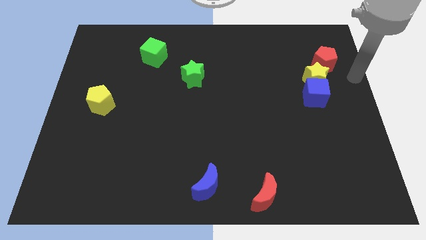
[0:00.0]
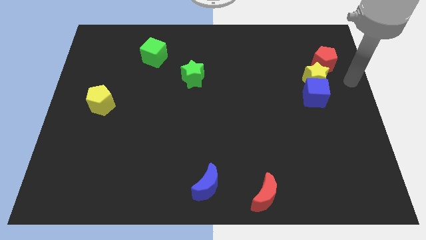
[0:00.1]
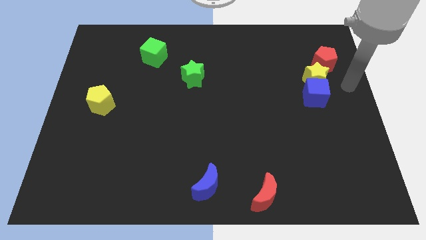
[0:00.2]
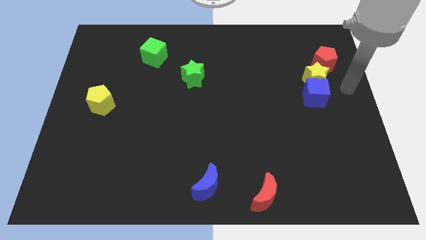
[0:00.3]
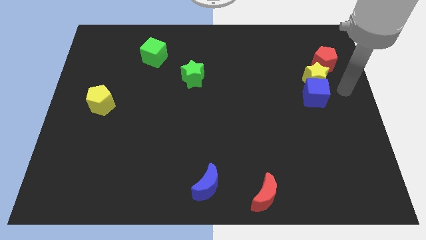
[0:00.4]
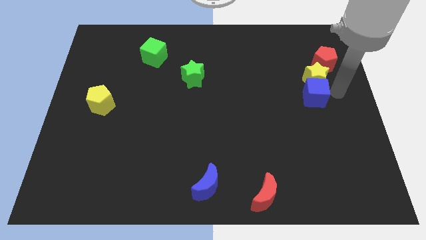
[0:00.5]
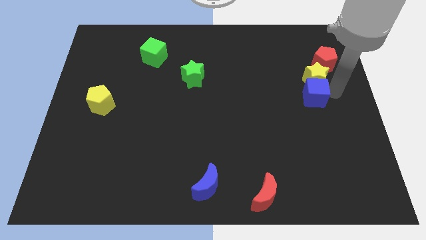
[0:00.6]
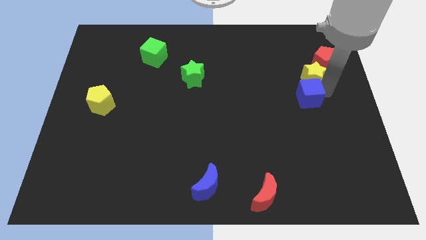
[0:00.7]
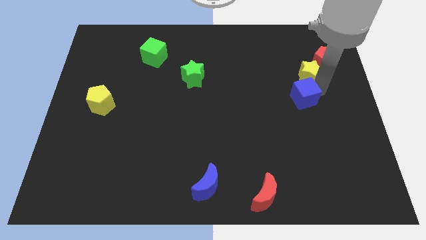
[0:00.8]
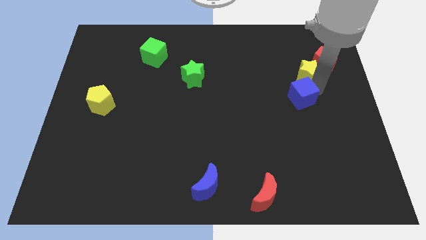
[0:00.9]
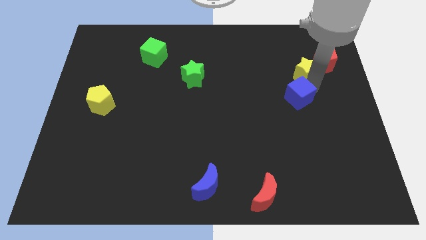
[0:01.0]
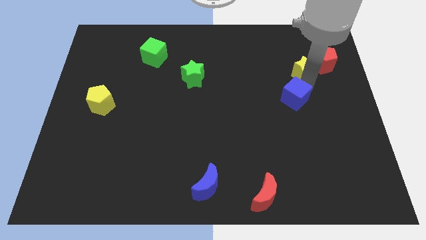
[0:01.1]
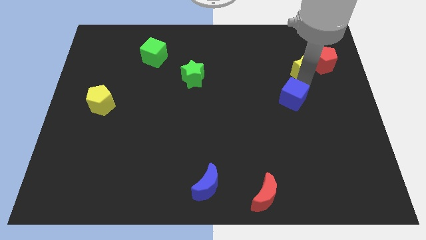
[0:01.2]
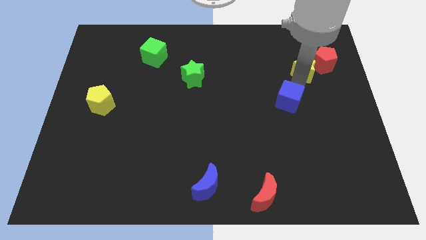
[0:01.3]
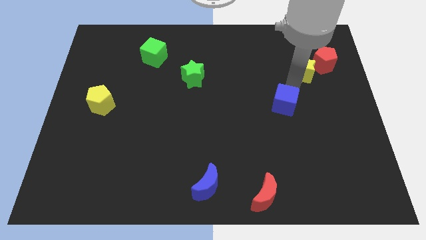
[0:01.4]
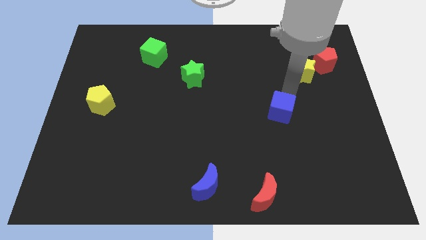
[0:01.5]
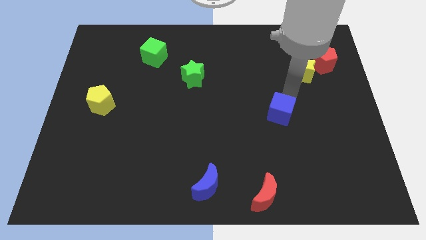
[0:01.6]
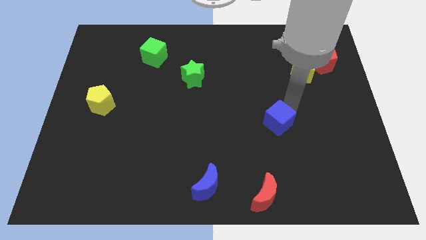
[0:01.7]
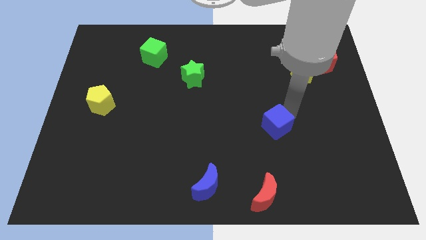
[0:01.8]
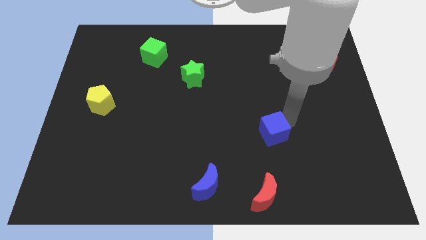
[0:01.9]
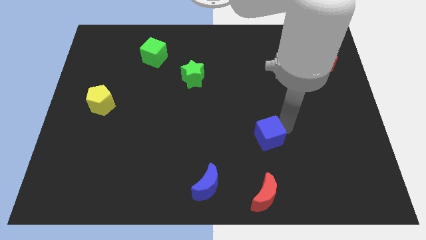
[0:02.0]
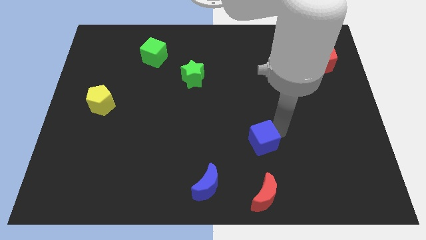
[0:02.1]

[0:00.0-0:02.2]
move the blue cube to the bottom of the board

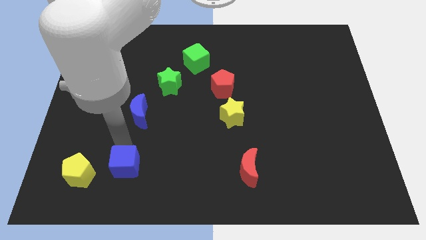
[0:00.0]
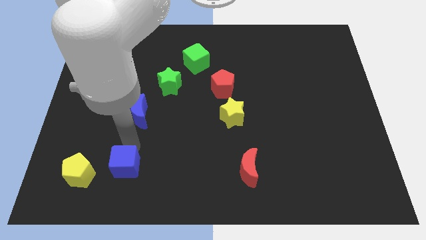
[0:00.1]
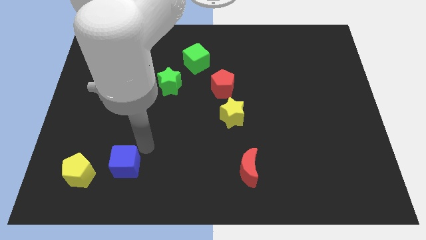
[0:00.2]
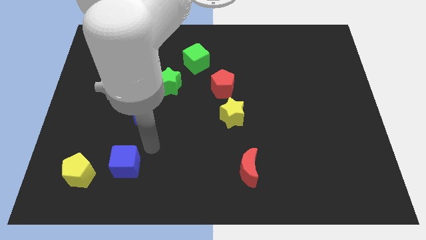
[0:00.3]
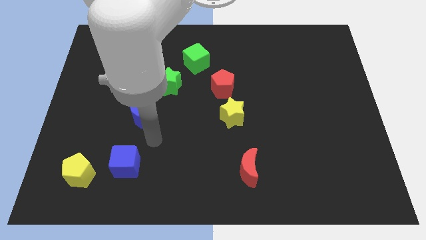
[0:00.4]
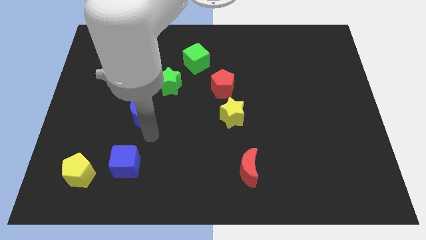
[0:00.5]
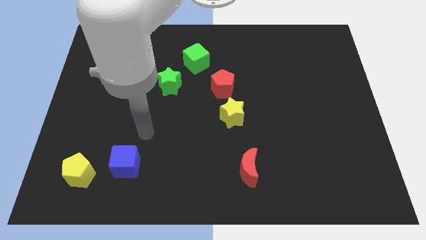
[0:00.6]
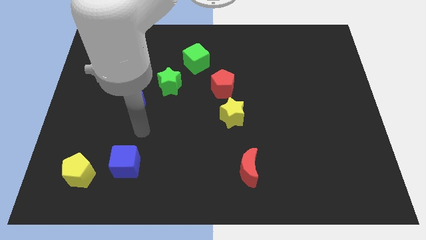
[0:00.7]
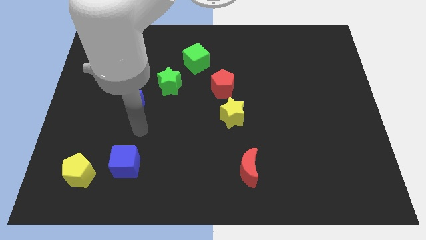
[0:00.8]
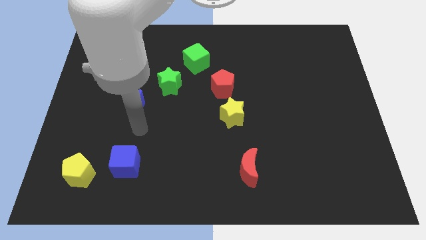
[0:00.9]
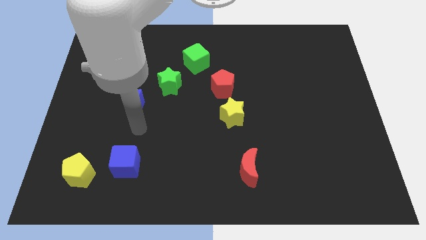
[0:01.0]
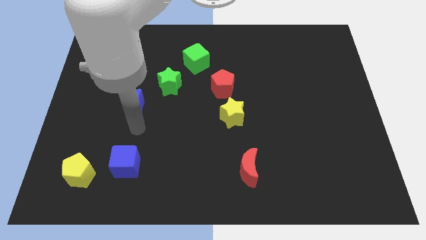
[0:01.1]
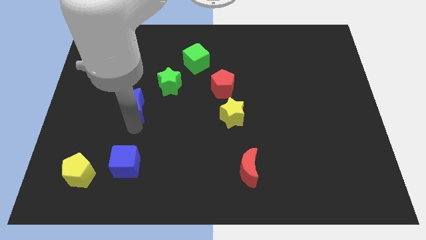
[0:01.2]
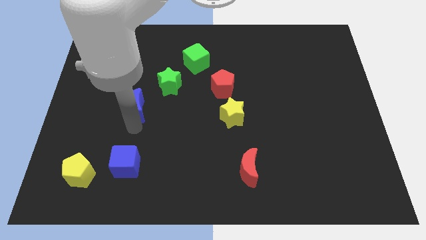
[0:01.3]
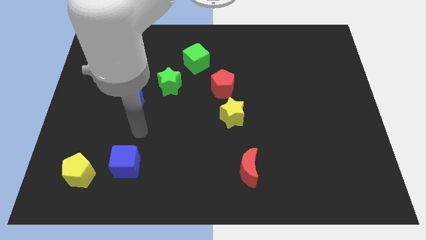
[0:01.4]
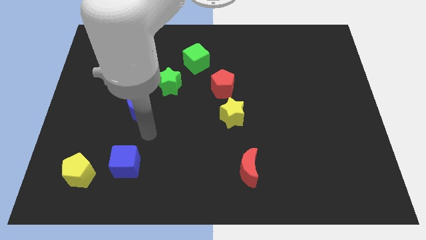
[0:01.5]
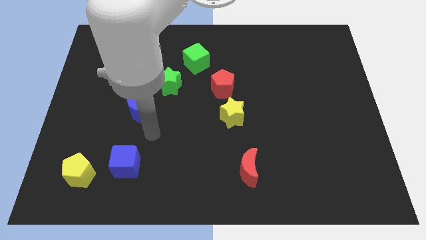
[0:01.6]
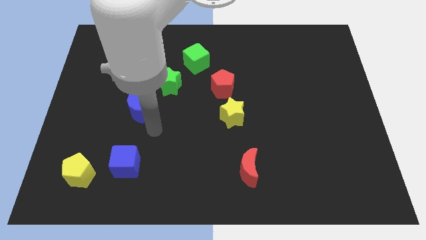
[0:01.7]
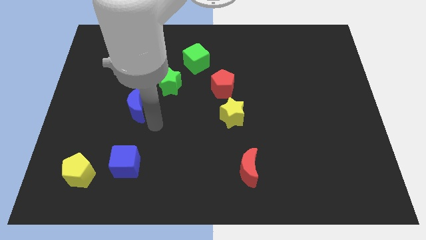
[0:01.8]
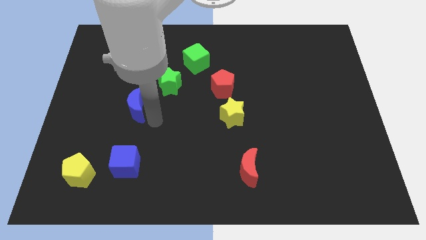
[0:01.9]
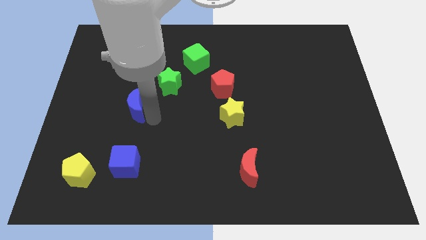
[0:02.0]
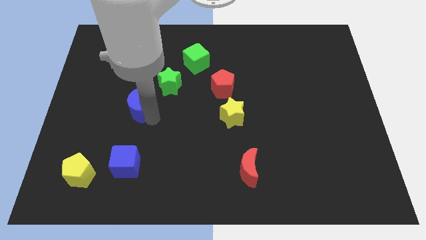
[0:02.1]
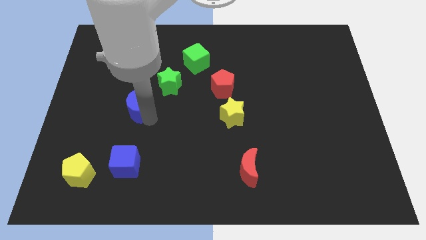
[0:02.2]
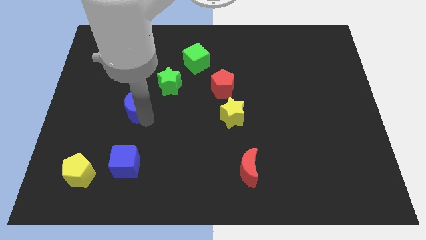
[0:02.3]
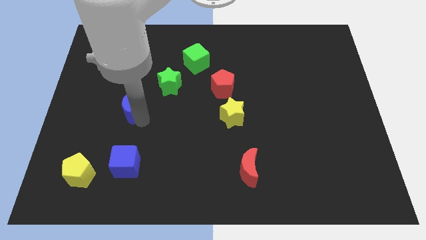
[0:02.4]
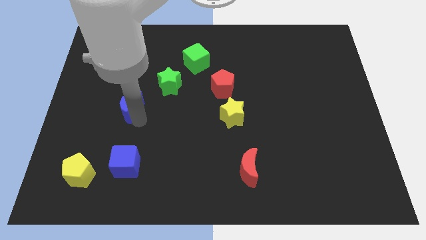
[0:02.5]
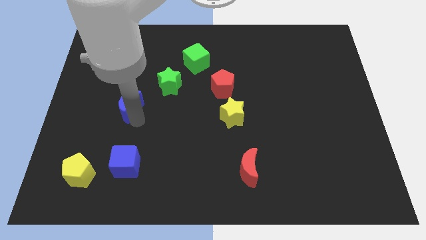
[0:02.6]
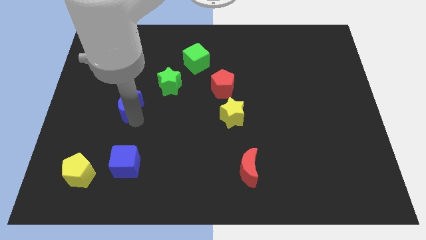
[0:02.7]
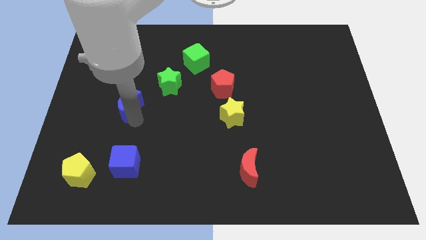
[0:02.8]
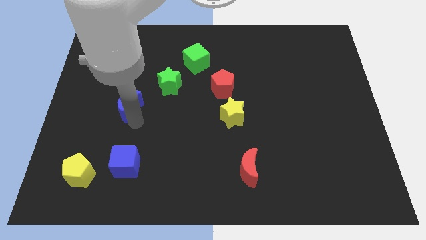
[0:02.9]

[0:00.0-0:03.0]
place blue crescent diagonally towards green star

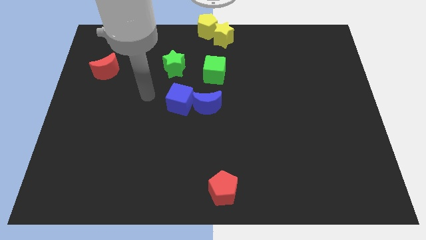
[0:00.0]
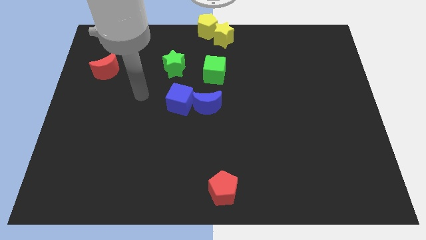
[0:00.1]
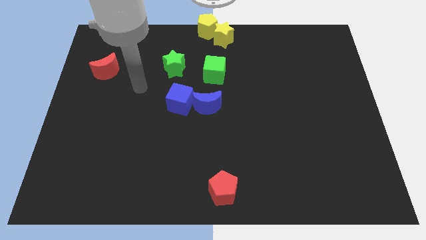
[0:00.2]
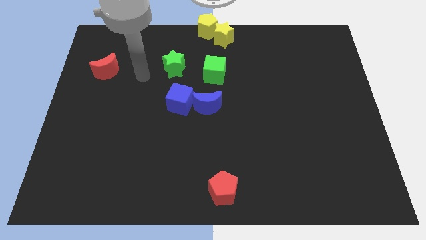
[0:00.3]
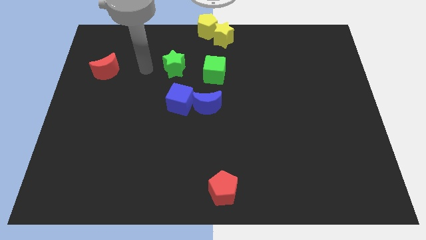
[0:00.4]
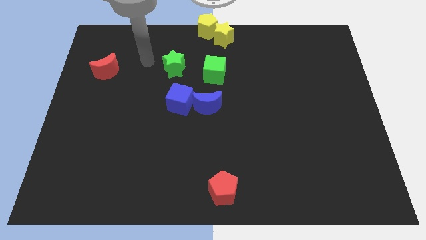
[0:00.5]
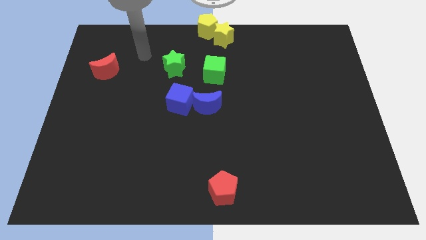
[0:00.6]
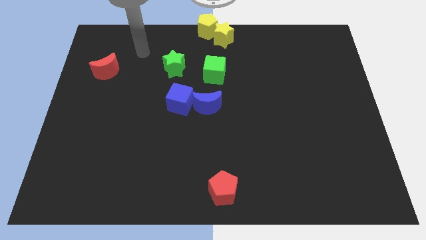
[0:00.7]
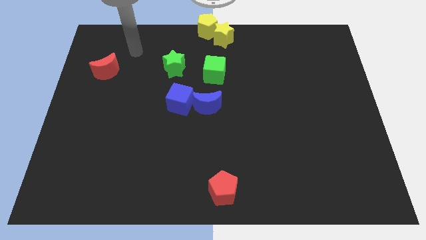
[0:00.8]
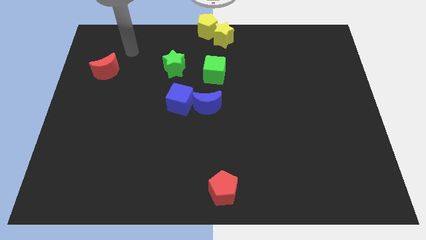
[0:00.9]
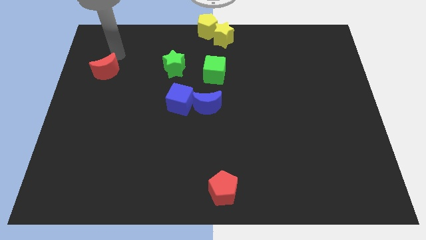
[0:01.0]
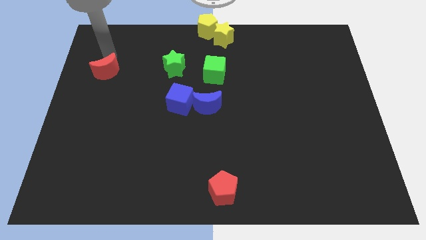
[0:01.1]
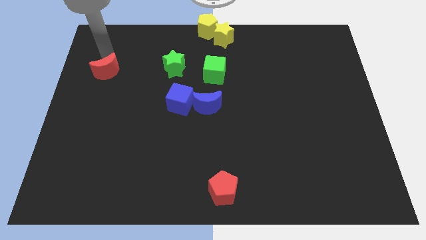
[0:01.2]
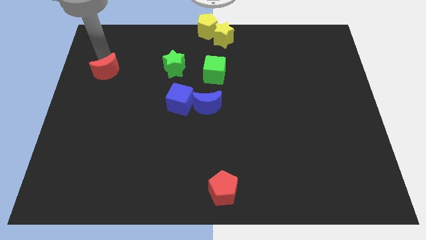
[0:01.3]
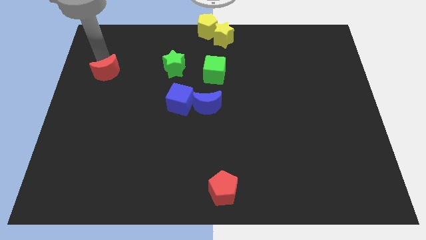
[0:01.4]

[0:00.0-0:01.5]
touch the top of the red moon

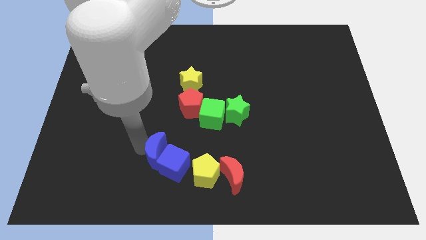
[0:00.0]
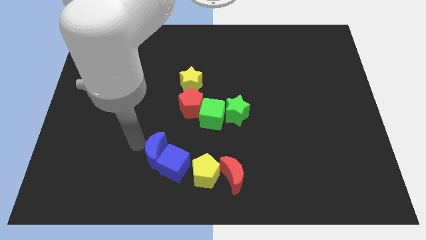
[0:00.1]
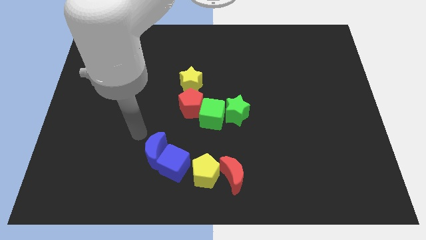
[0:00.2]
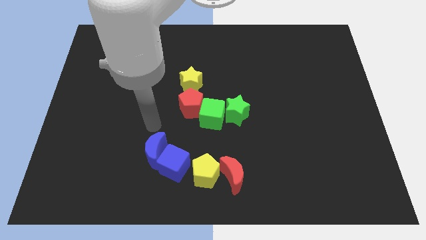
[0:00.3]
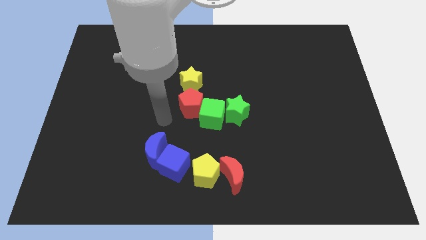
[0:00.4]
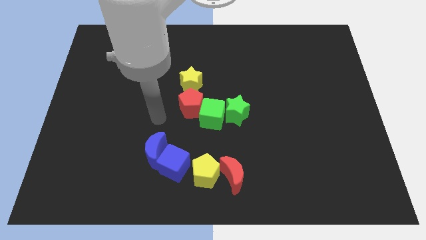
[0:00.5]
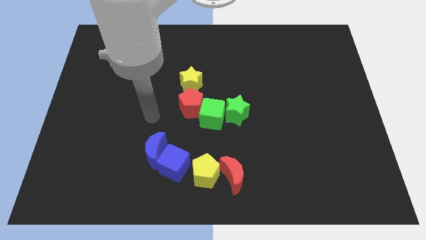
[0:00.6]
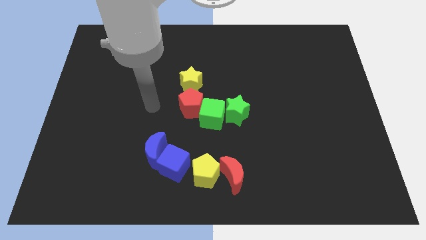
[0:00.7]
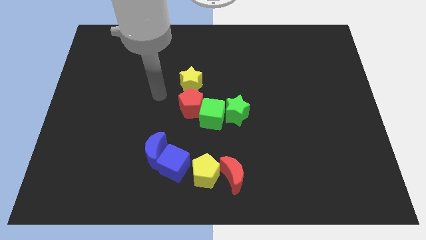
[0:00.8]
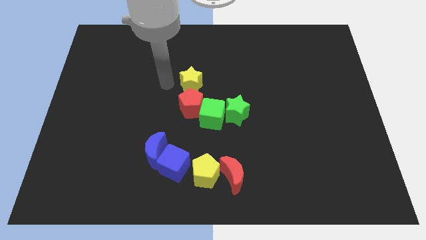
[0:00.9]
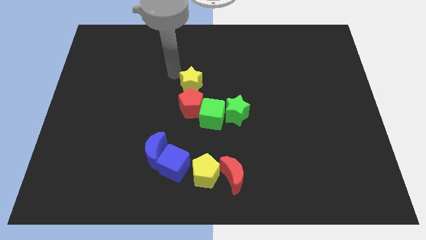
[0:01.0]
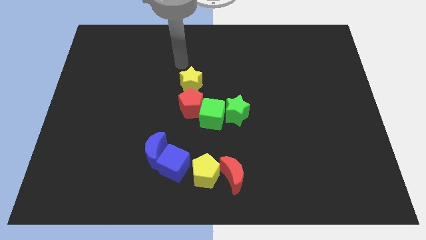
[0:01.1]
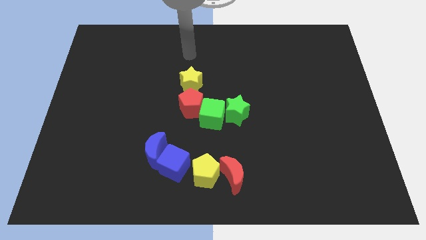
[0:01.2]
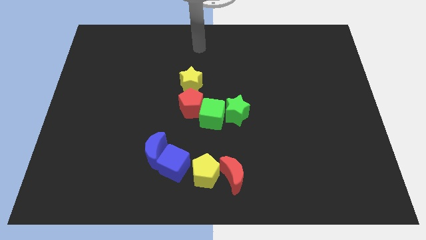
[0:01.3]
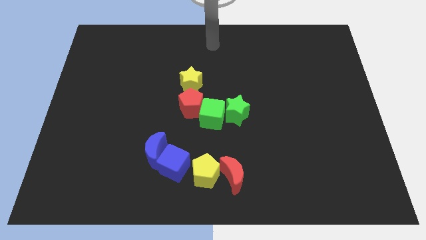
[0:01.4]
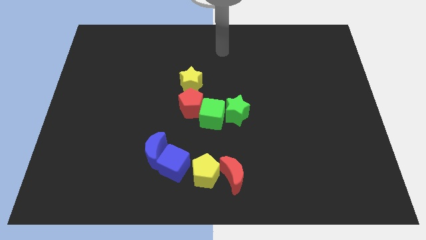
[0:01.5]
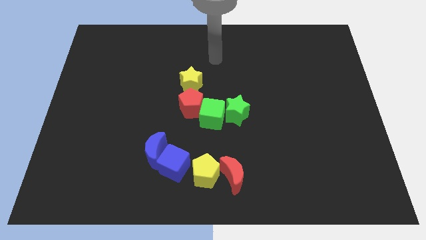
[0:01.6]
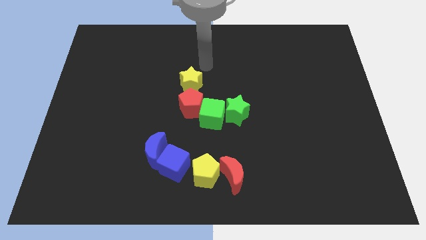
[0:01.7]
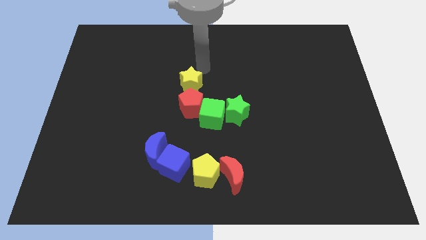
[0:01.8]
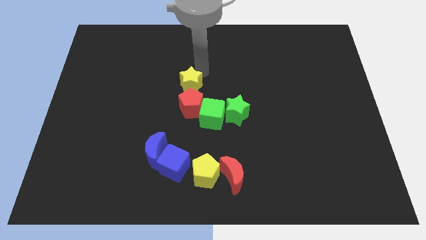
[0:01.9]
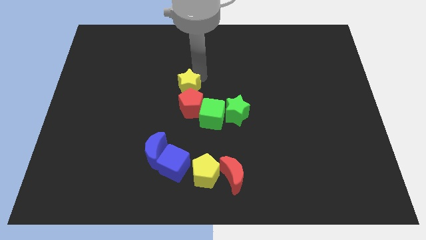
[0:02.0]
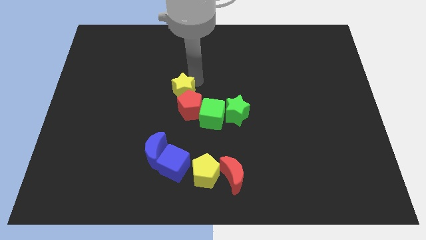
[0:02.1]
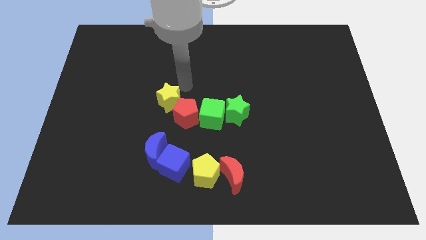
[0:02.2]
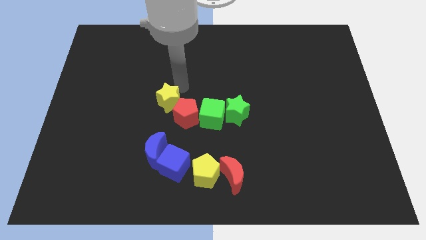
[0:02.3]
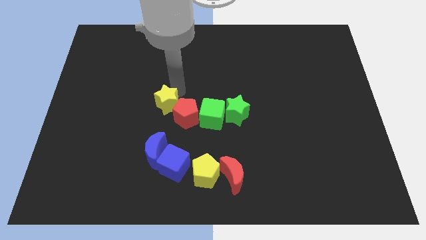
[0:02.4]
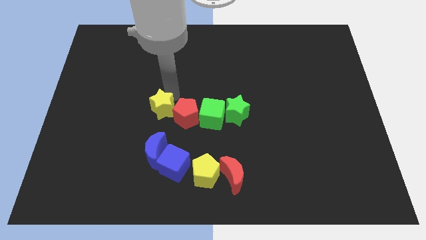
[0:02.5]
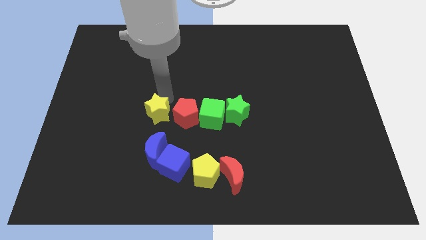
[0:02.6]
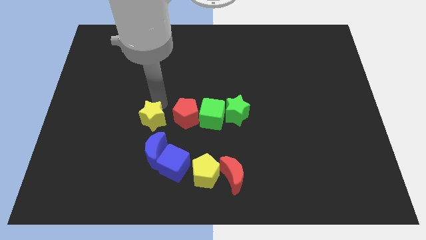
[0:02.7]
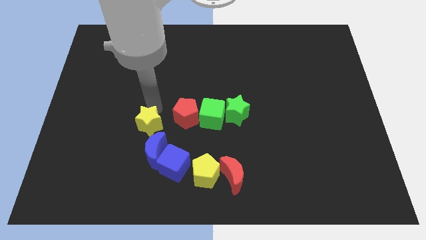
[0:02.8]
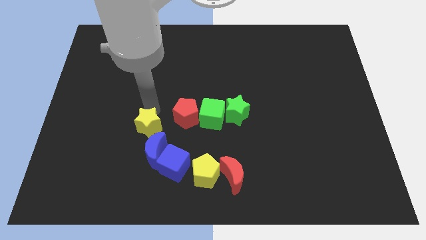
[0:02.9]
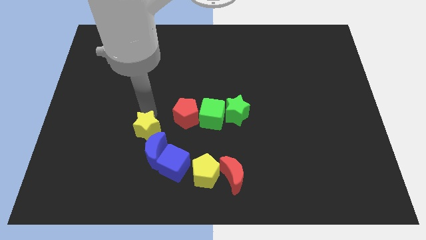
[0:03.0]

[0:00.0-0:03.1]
move the yellow star to the top left side of the blue crescent
